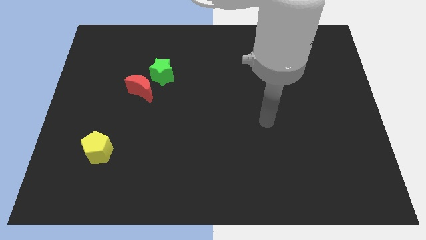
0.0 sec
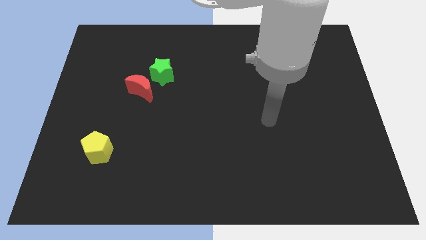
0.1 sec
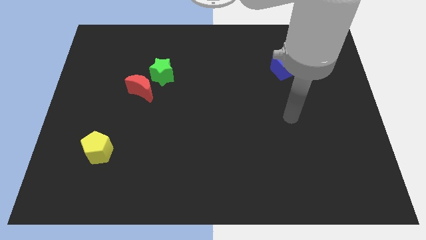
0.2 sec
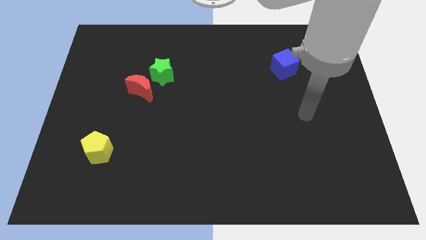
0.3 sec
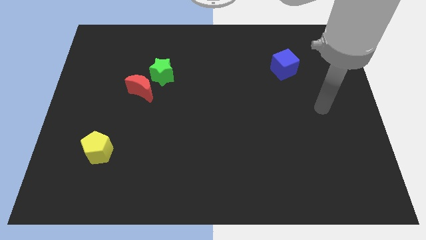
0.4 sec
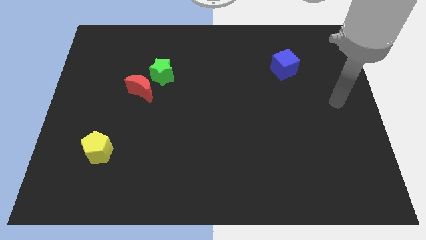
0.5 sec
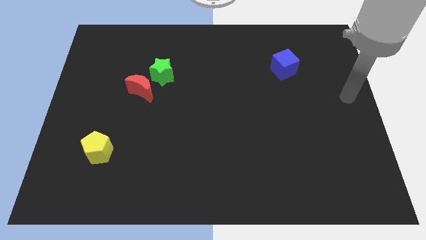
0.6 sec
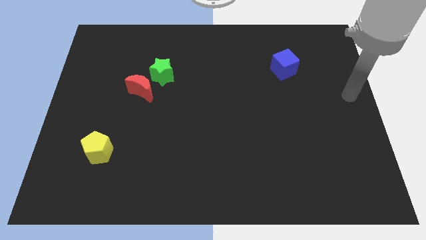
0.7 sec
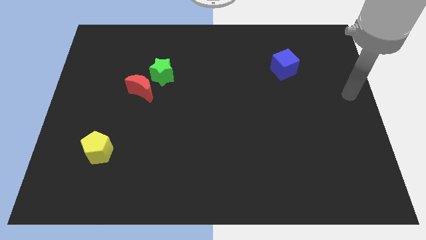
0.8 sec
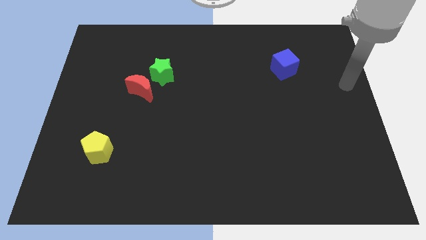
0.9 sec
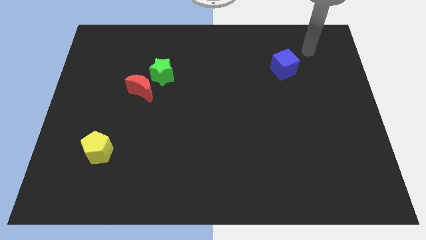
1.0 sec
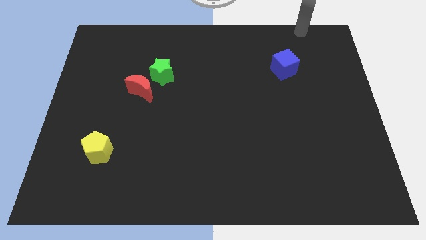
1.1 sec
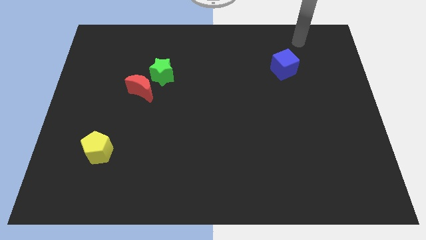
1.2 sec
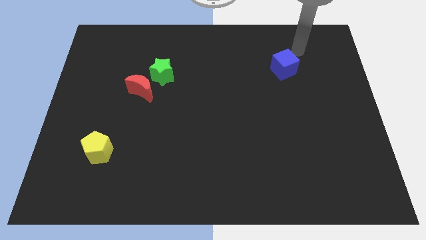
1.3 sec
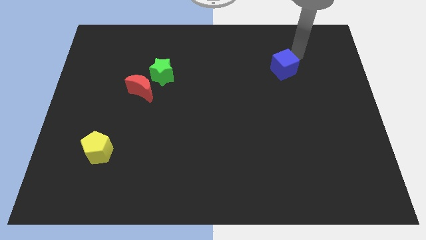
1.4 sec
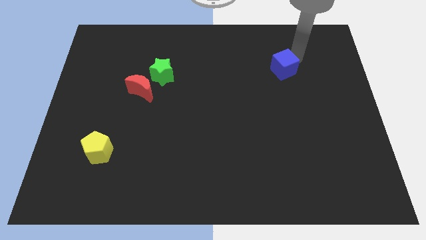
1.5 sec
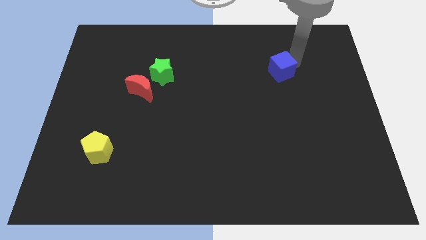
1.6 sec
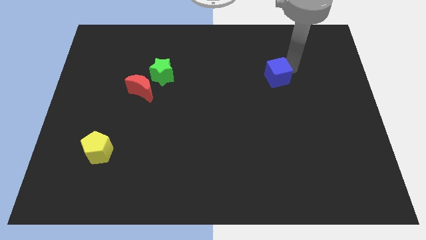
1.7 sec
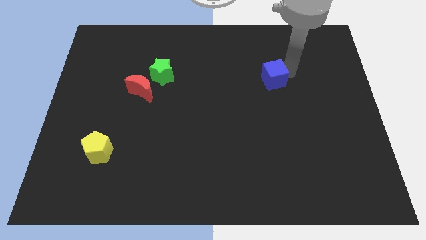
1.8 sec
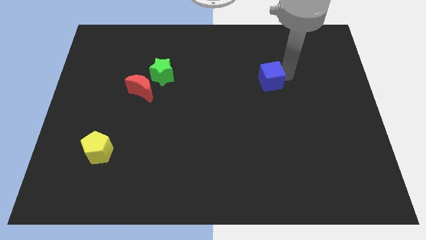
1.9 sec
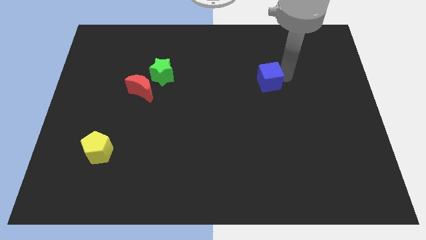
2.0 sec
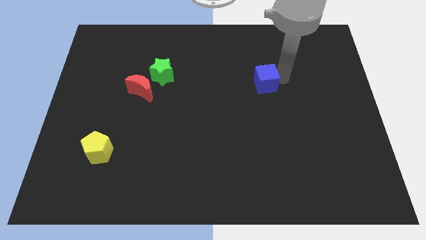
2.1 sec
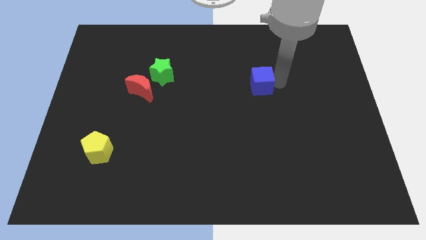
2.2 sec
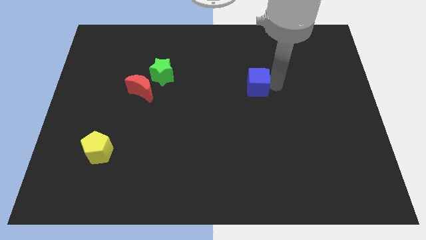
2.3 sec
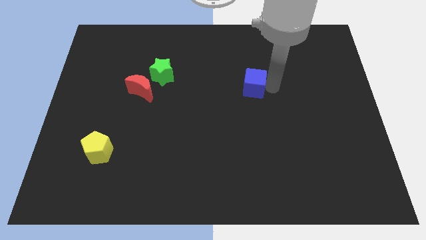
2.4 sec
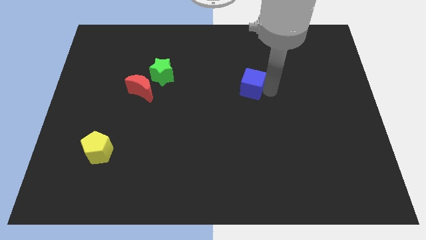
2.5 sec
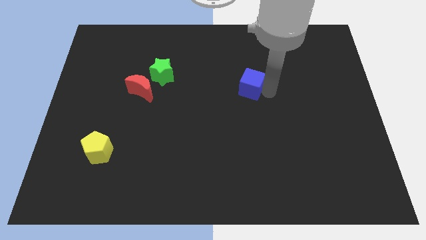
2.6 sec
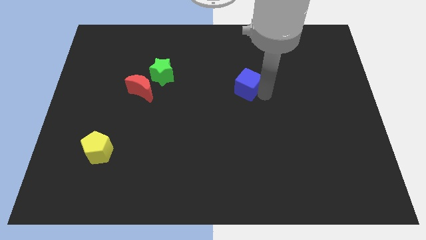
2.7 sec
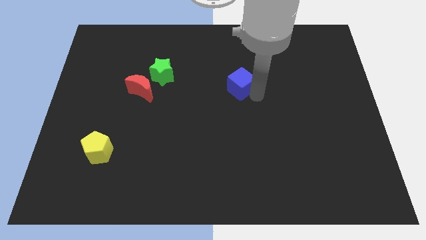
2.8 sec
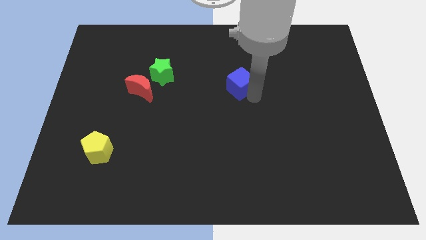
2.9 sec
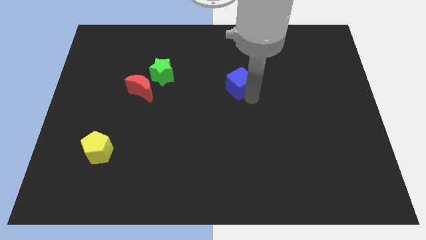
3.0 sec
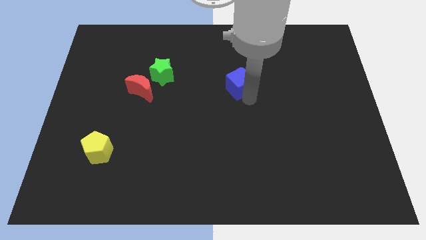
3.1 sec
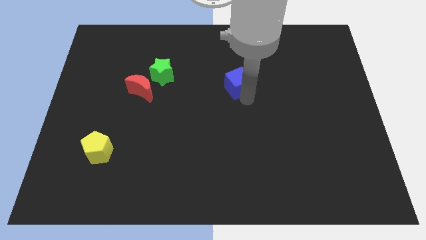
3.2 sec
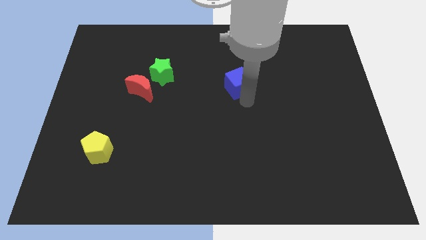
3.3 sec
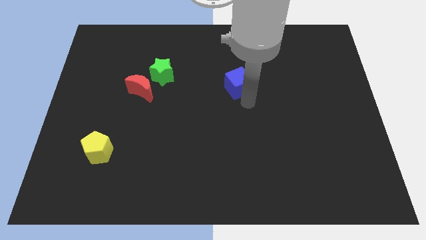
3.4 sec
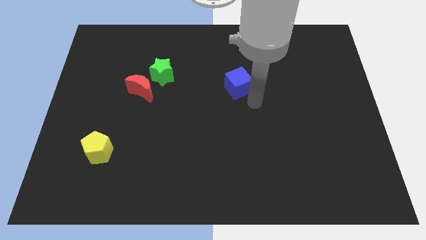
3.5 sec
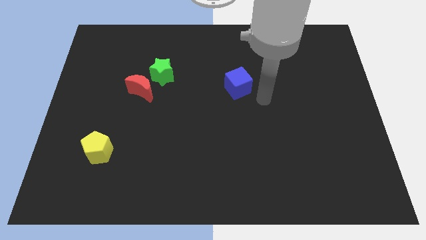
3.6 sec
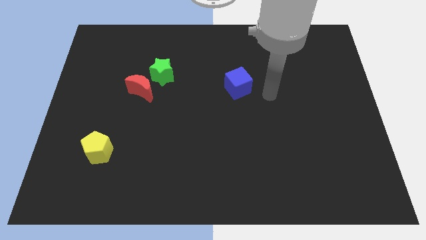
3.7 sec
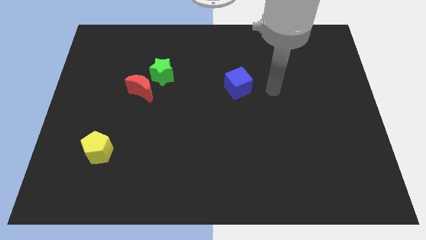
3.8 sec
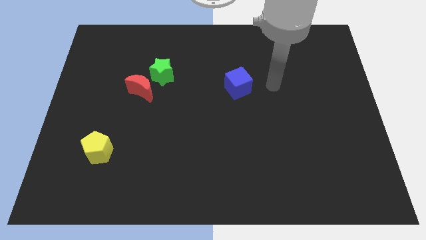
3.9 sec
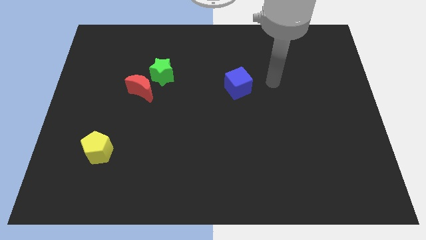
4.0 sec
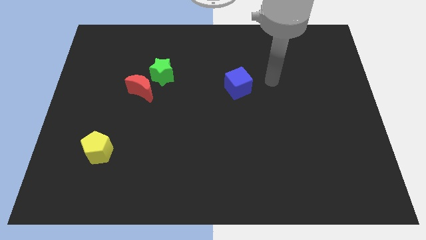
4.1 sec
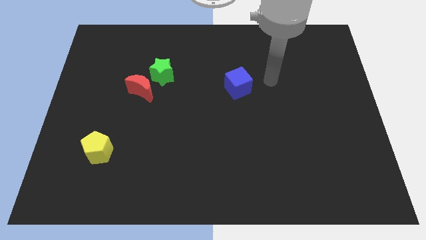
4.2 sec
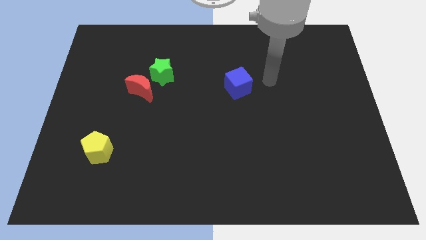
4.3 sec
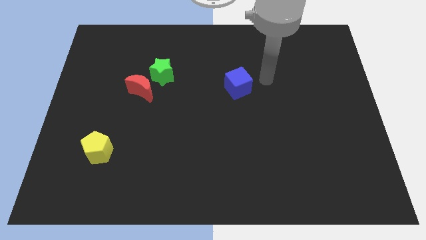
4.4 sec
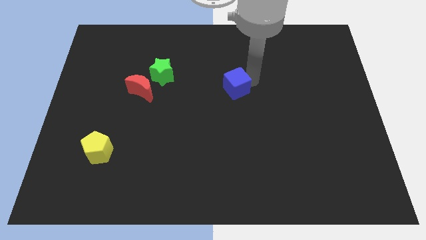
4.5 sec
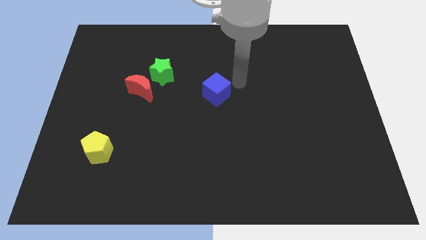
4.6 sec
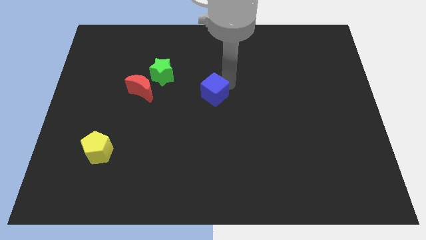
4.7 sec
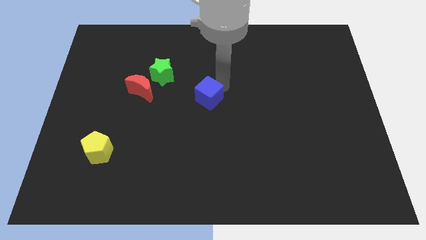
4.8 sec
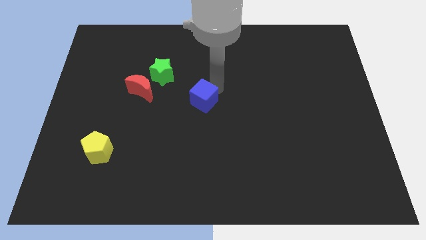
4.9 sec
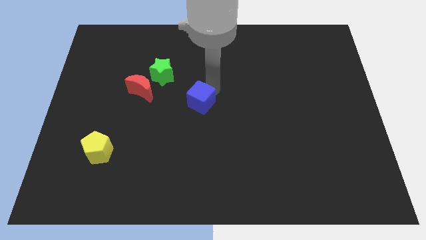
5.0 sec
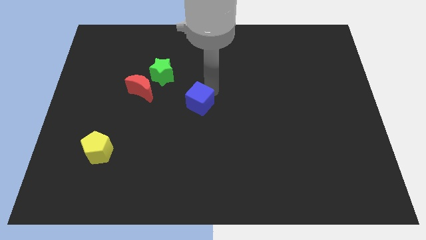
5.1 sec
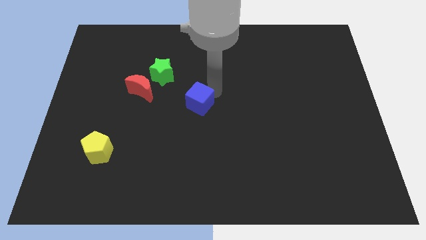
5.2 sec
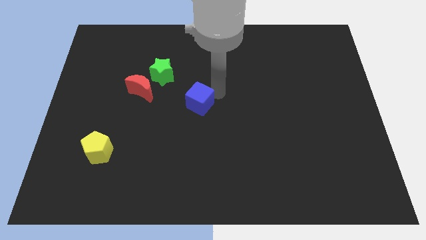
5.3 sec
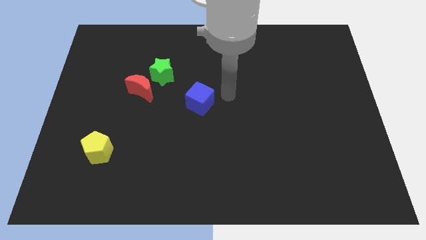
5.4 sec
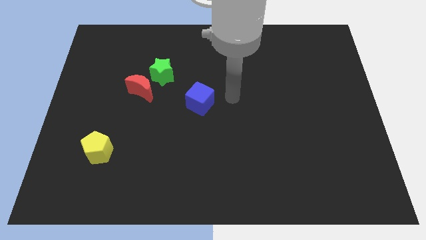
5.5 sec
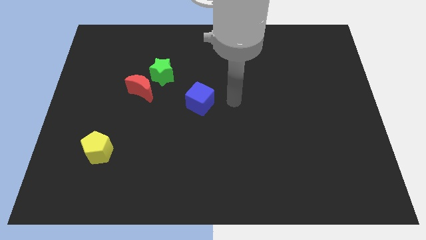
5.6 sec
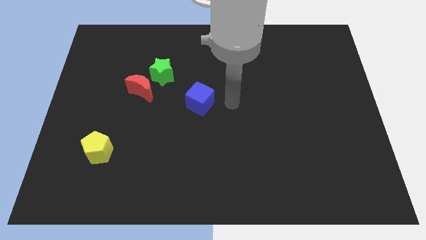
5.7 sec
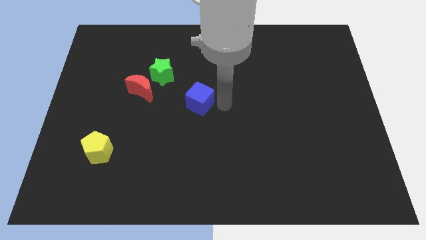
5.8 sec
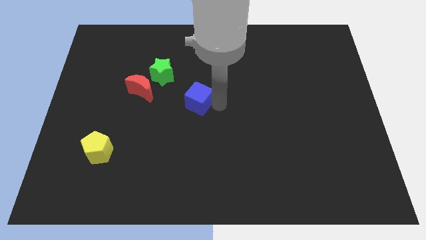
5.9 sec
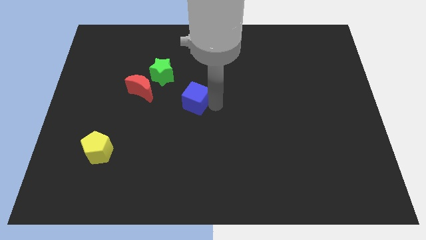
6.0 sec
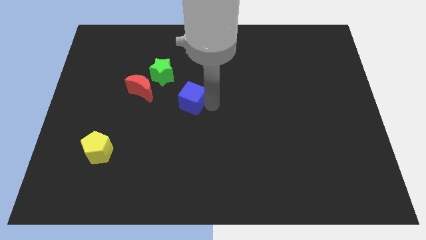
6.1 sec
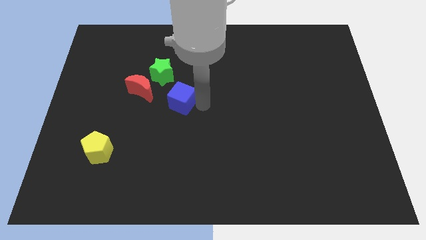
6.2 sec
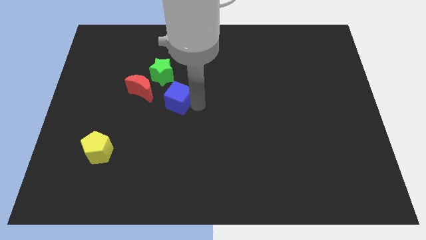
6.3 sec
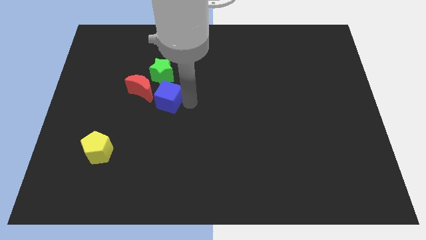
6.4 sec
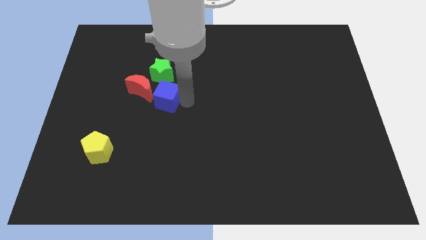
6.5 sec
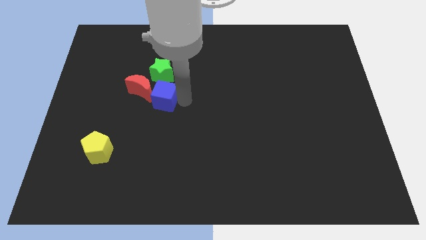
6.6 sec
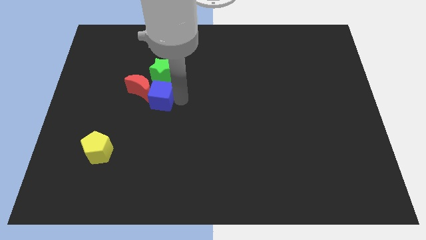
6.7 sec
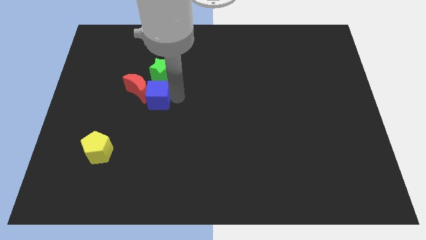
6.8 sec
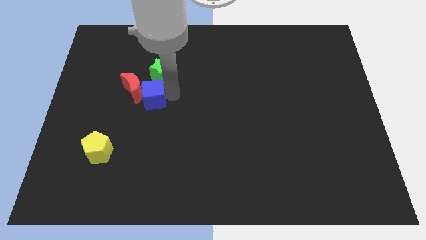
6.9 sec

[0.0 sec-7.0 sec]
push the blue cube to the red moon

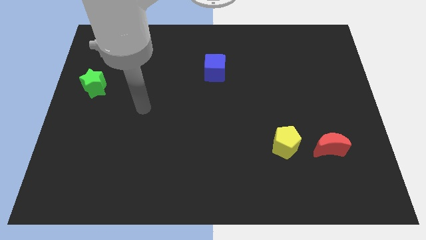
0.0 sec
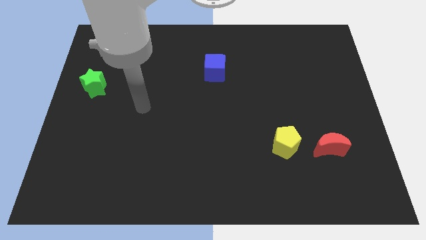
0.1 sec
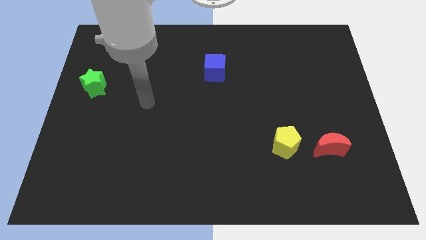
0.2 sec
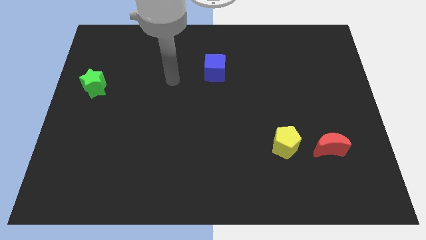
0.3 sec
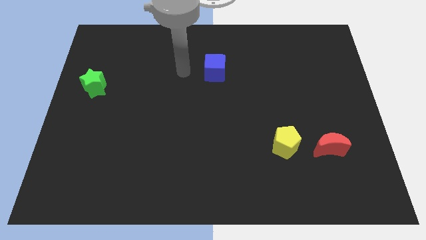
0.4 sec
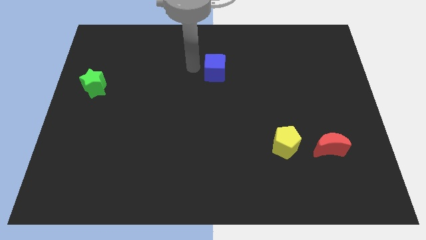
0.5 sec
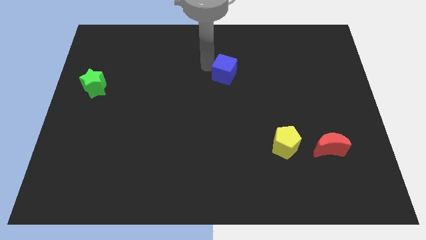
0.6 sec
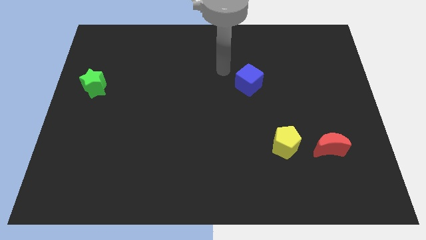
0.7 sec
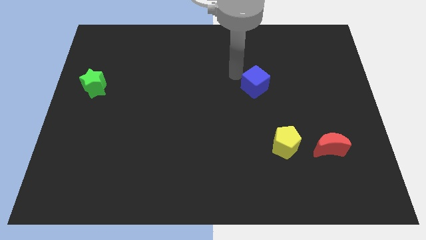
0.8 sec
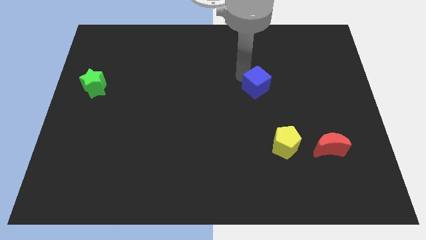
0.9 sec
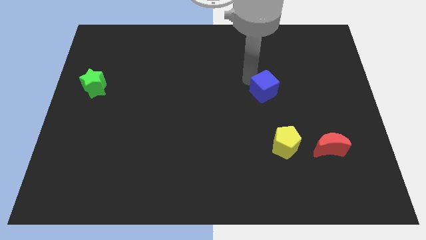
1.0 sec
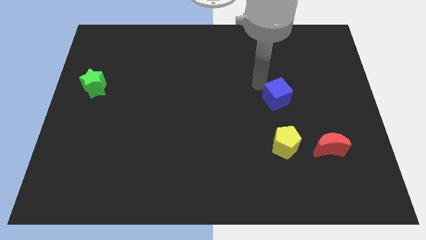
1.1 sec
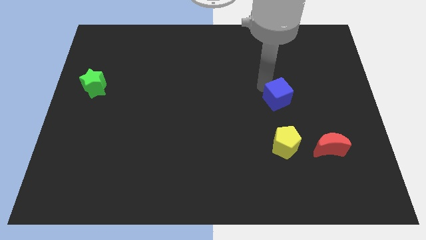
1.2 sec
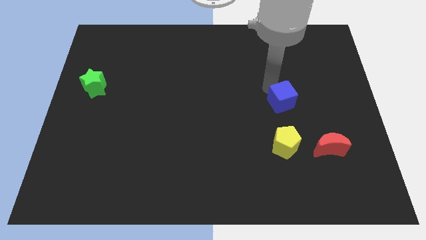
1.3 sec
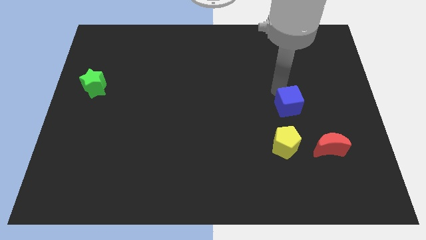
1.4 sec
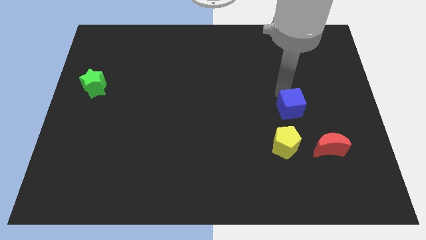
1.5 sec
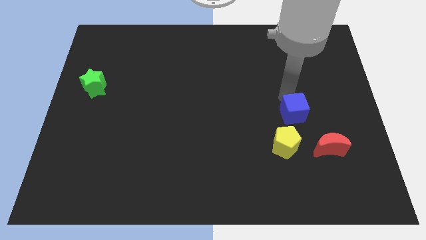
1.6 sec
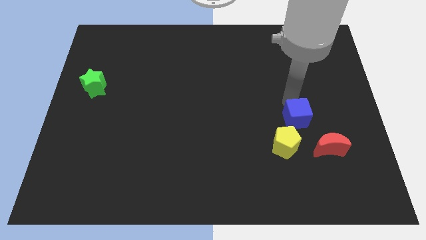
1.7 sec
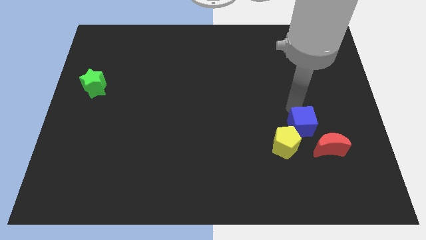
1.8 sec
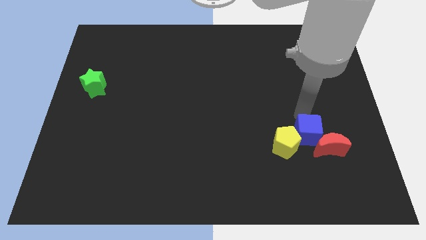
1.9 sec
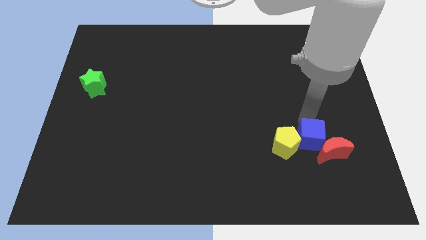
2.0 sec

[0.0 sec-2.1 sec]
push the blue cube towards the red moon
